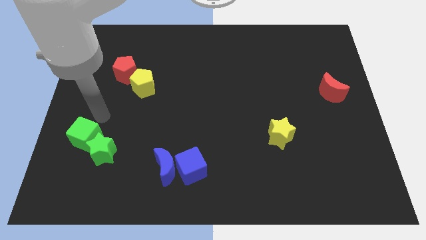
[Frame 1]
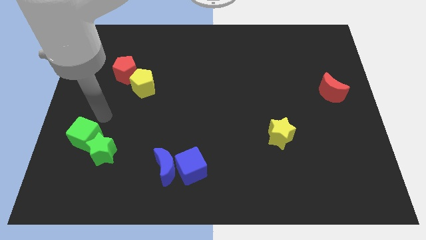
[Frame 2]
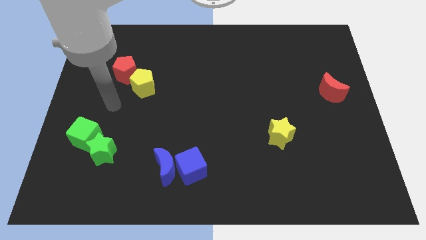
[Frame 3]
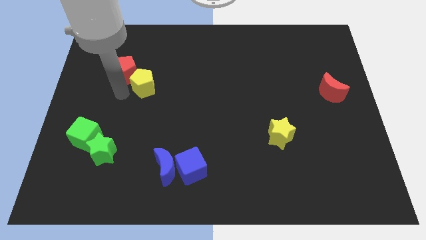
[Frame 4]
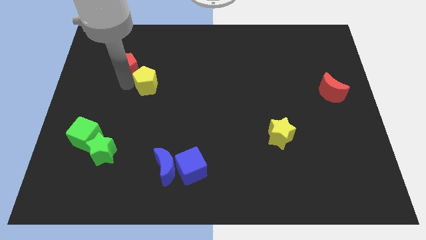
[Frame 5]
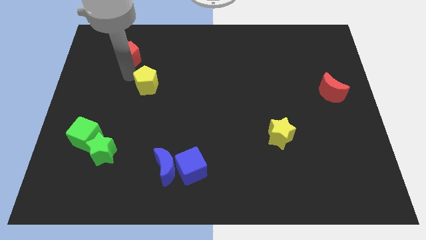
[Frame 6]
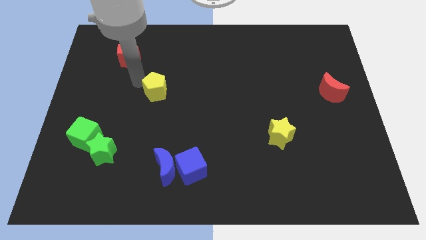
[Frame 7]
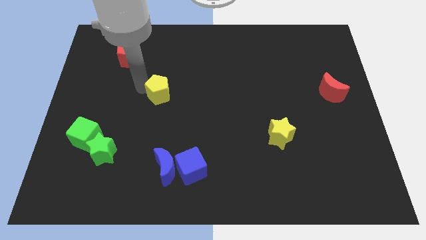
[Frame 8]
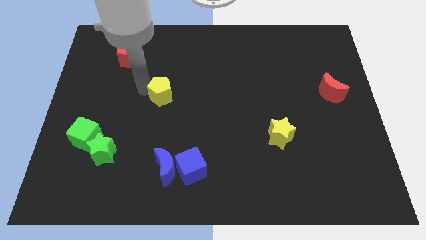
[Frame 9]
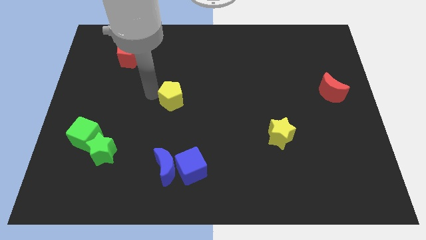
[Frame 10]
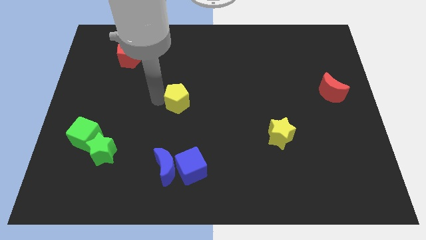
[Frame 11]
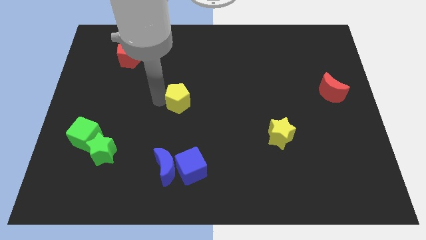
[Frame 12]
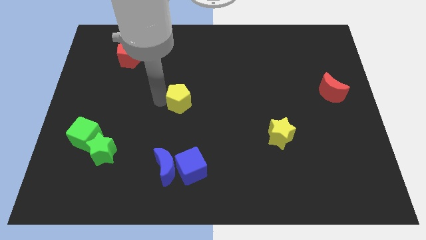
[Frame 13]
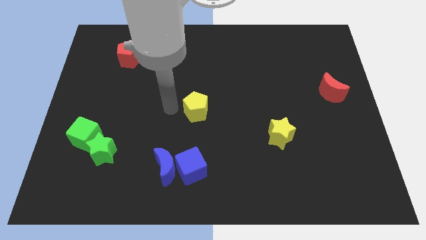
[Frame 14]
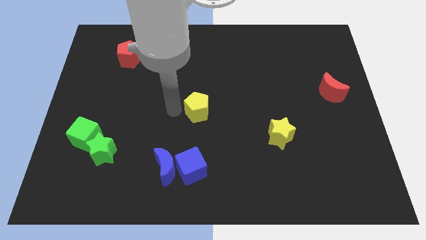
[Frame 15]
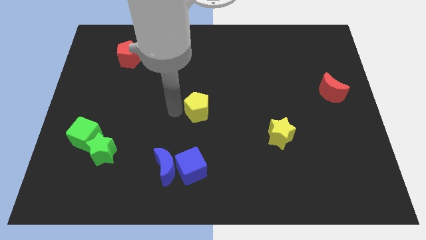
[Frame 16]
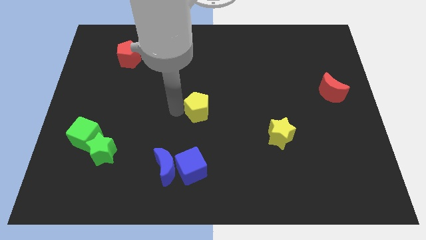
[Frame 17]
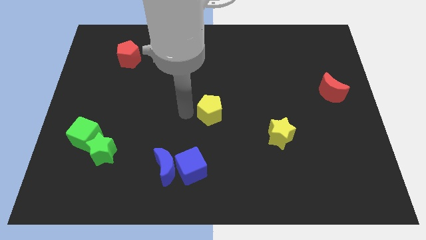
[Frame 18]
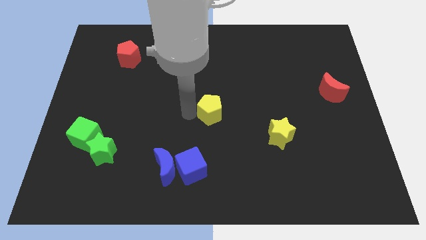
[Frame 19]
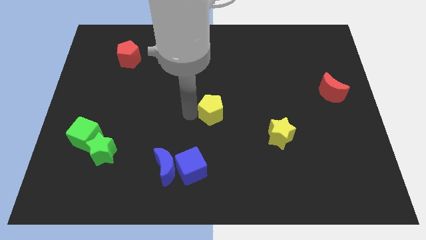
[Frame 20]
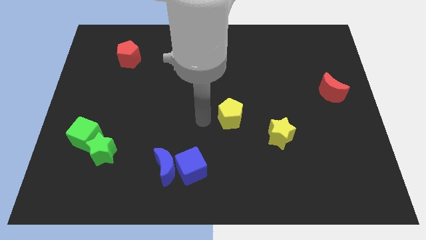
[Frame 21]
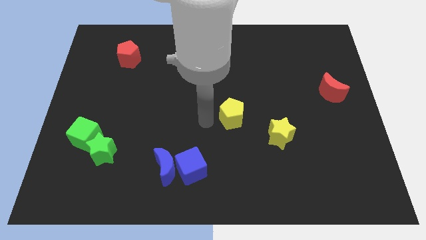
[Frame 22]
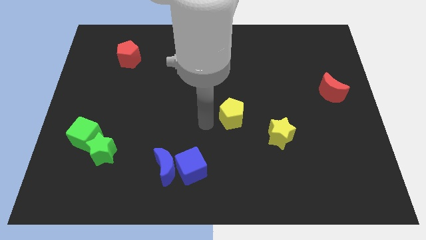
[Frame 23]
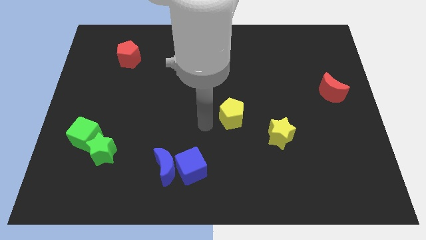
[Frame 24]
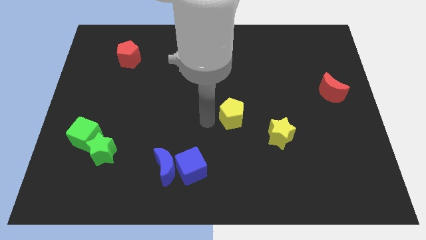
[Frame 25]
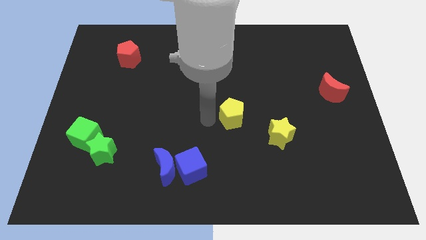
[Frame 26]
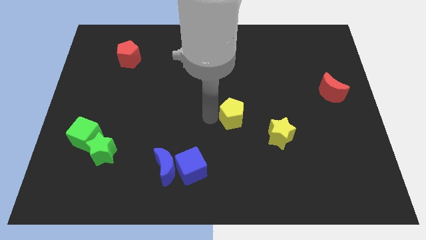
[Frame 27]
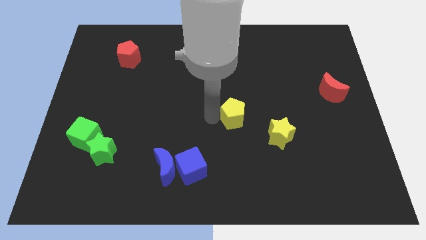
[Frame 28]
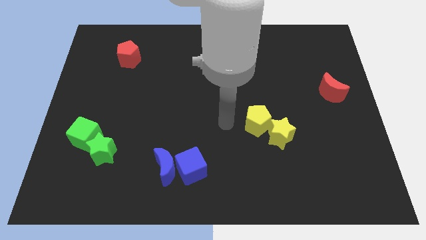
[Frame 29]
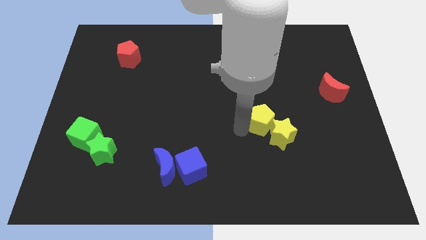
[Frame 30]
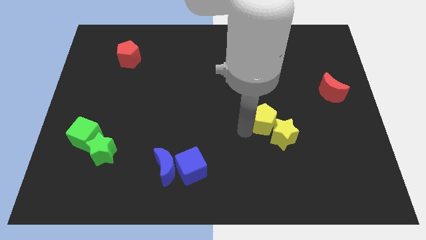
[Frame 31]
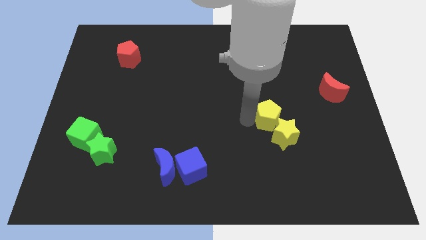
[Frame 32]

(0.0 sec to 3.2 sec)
move the yellow pentagon into the yellow star

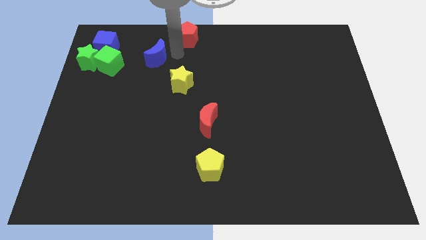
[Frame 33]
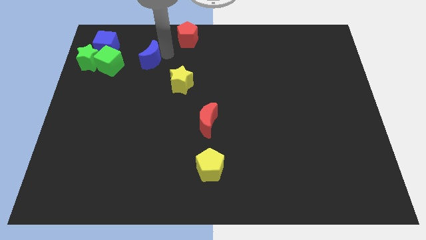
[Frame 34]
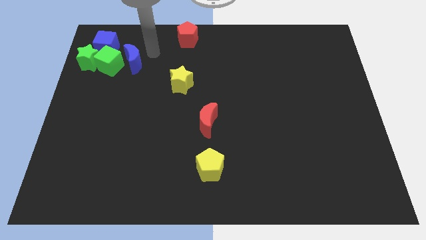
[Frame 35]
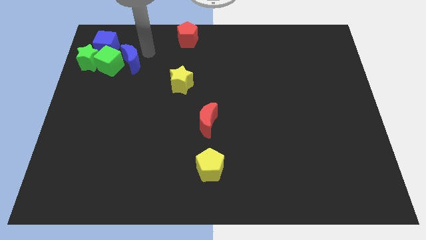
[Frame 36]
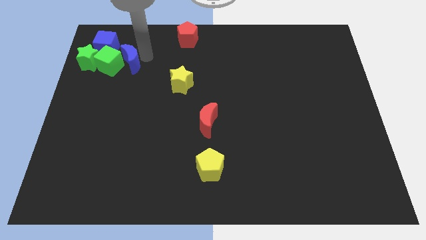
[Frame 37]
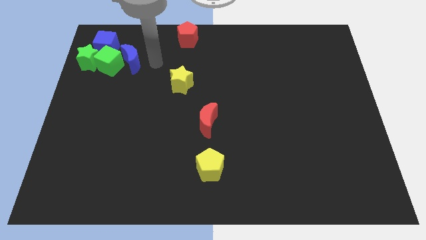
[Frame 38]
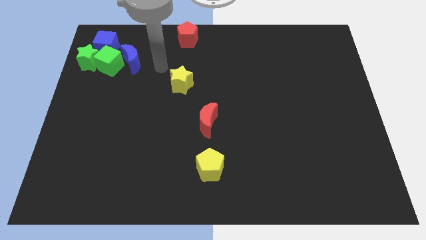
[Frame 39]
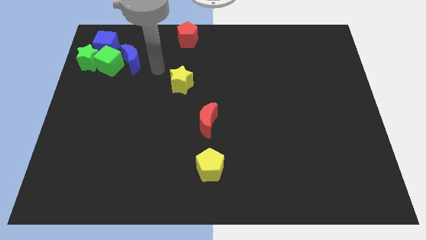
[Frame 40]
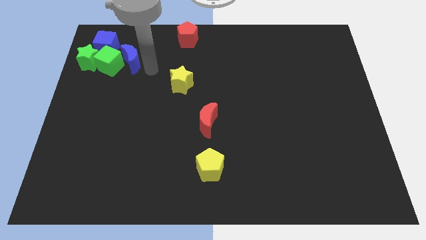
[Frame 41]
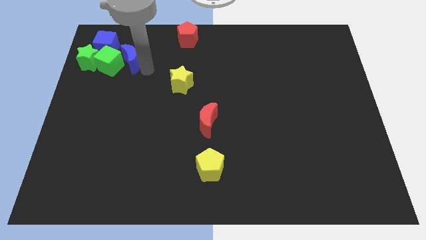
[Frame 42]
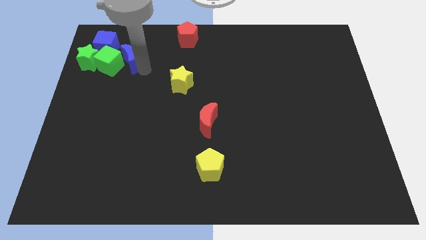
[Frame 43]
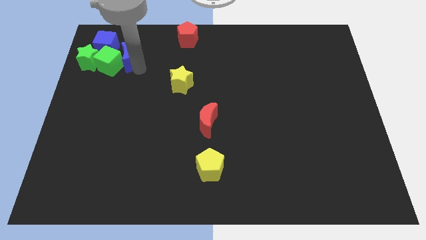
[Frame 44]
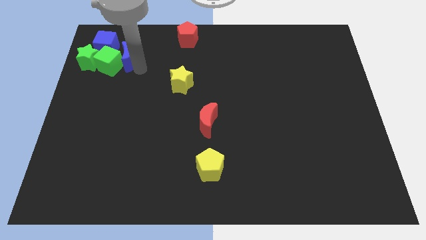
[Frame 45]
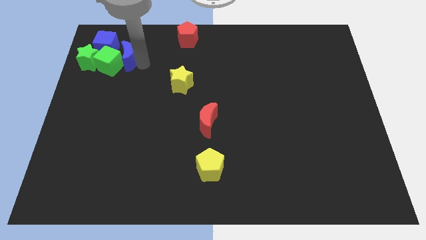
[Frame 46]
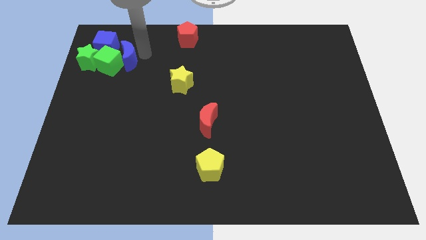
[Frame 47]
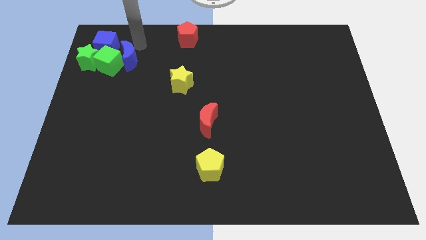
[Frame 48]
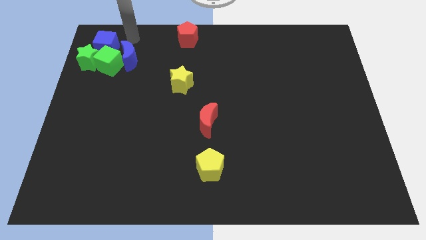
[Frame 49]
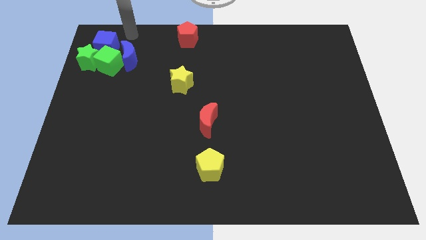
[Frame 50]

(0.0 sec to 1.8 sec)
move blue moon into green cube

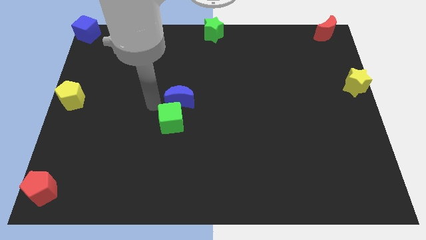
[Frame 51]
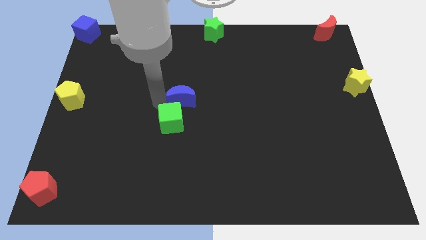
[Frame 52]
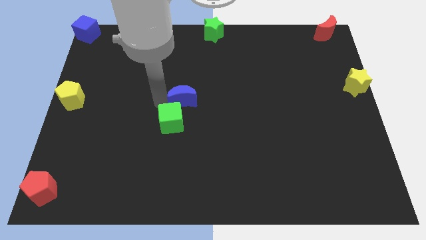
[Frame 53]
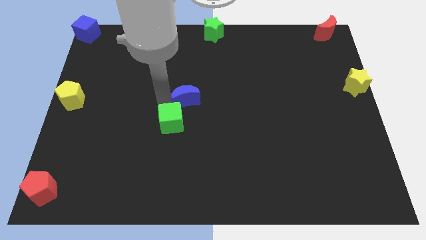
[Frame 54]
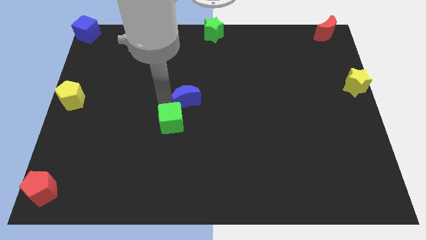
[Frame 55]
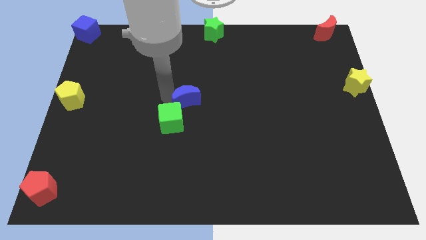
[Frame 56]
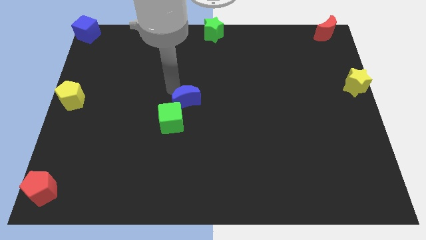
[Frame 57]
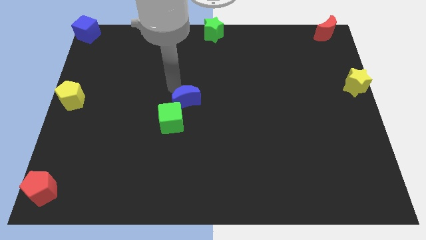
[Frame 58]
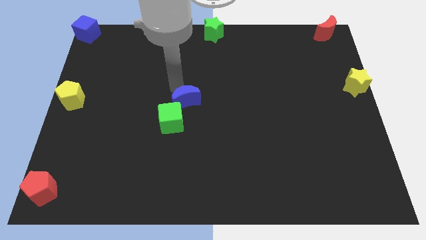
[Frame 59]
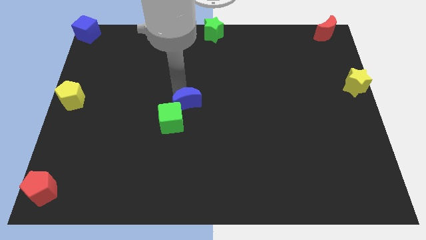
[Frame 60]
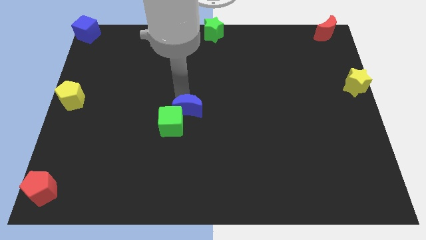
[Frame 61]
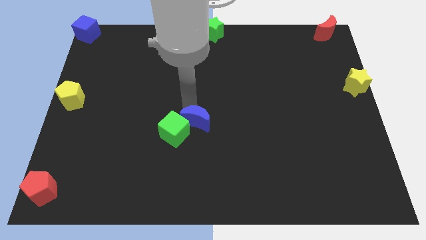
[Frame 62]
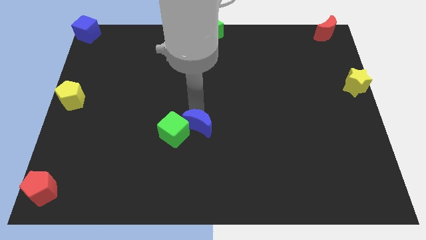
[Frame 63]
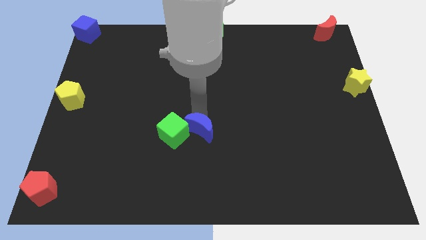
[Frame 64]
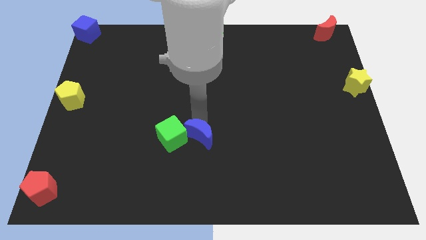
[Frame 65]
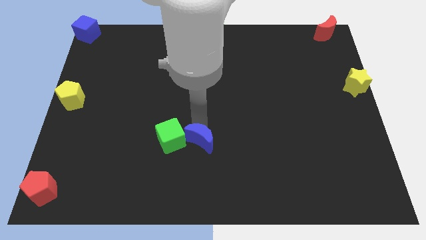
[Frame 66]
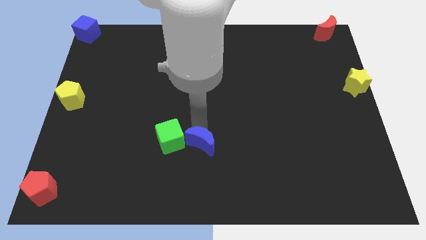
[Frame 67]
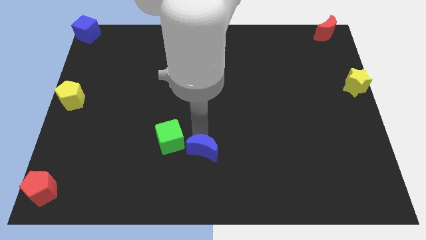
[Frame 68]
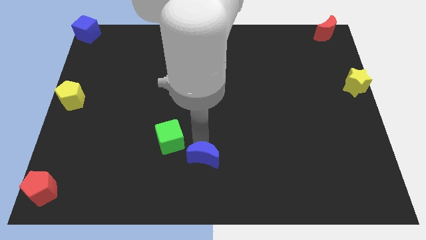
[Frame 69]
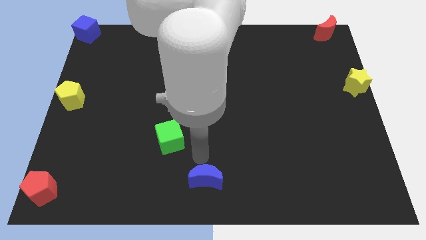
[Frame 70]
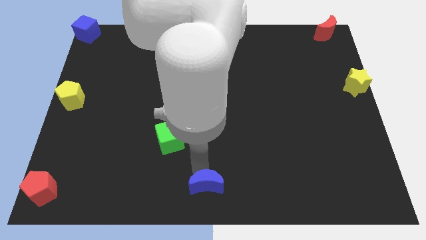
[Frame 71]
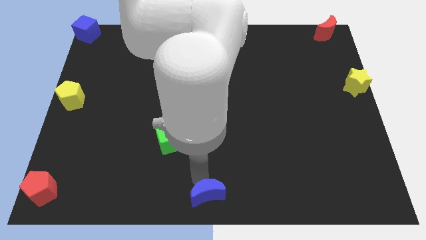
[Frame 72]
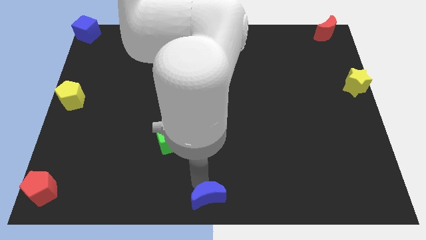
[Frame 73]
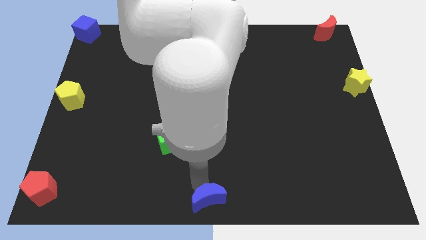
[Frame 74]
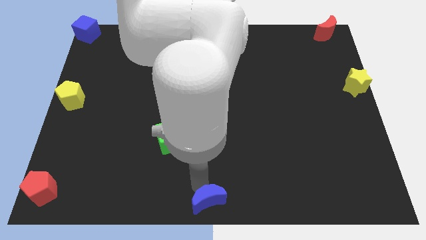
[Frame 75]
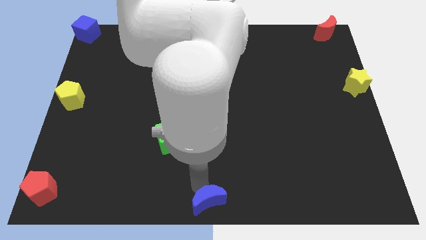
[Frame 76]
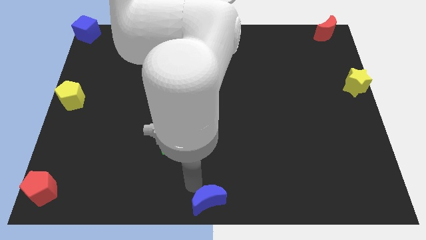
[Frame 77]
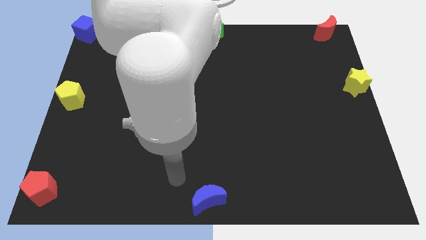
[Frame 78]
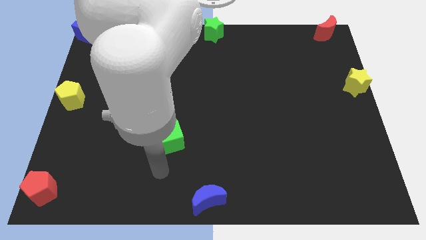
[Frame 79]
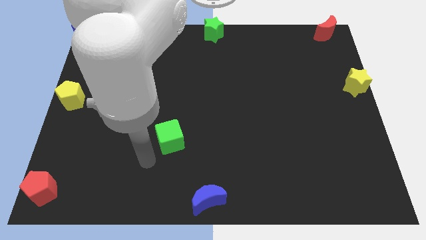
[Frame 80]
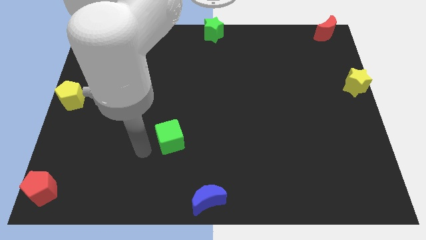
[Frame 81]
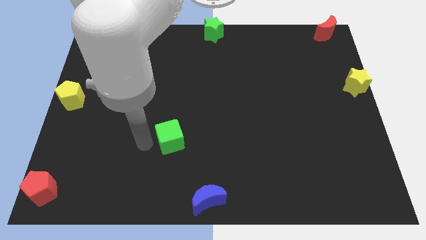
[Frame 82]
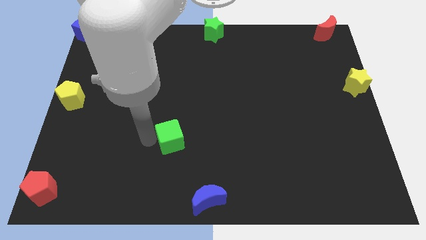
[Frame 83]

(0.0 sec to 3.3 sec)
place the blue crescent at the bottom center of the board

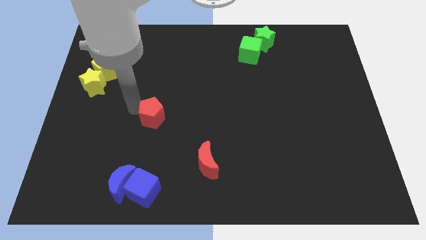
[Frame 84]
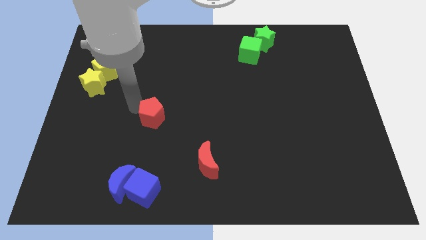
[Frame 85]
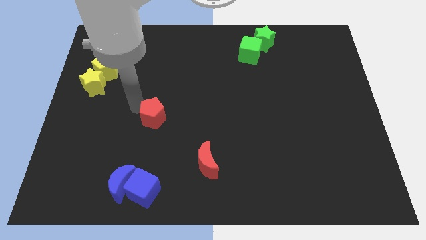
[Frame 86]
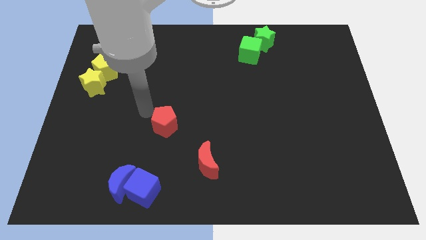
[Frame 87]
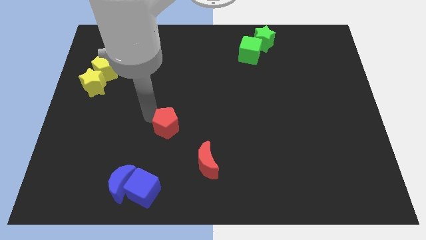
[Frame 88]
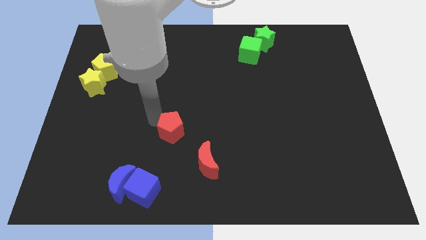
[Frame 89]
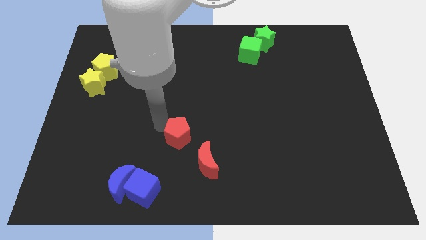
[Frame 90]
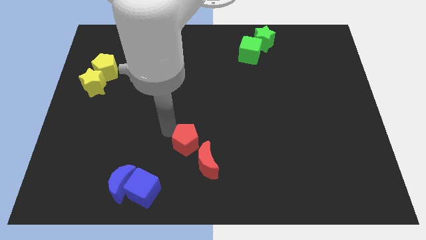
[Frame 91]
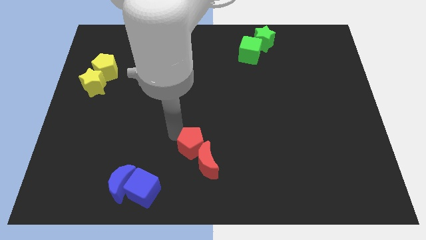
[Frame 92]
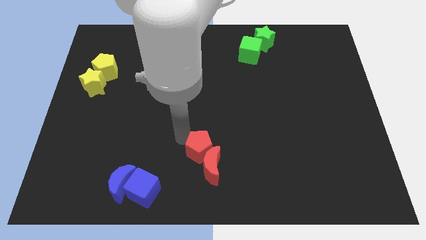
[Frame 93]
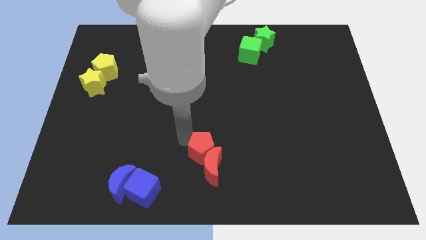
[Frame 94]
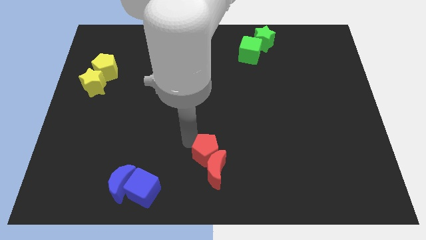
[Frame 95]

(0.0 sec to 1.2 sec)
move the red pentagon into the top left side of the red crescent
